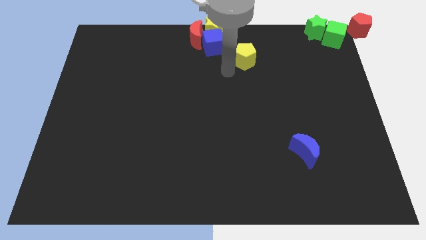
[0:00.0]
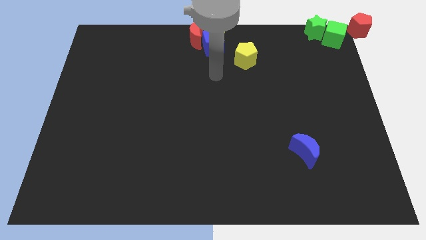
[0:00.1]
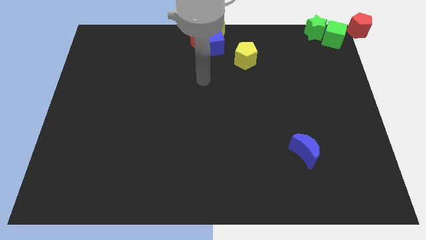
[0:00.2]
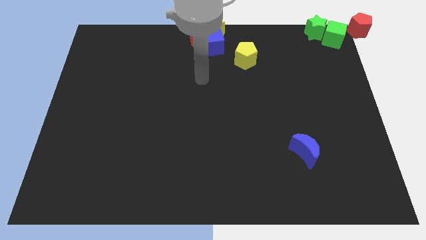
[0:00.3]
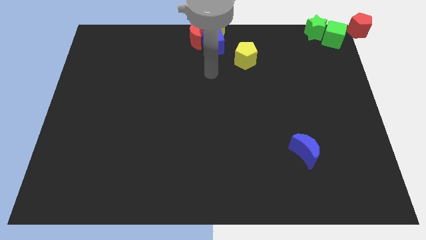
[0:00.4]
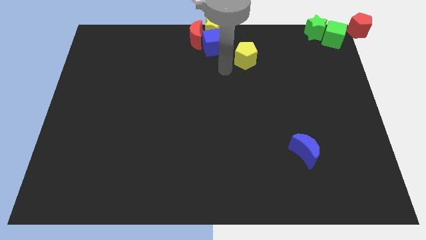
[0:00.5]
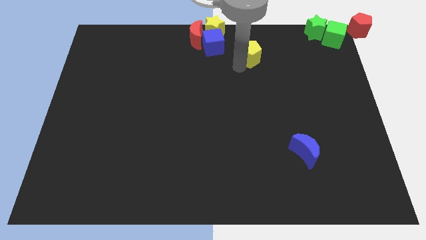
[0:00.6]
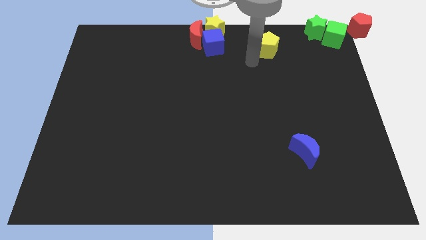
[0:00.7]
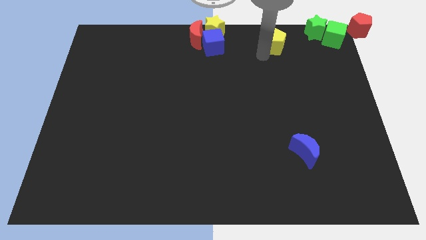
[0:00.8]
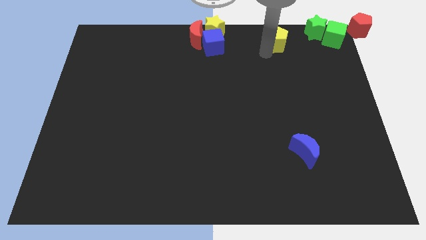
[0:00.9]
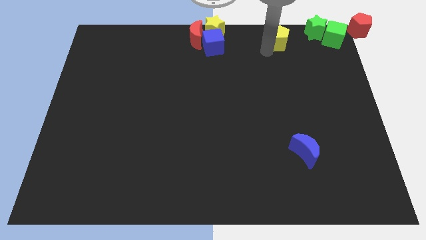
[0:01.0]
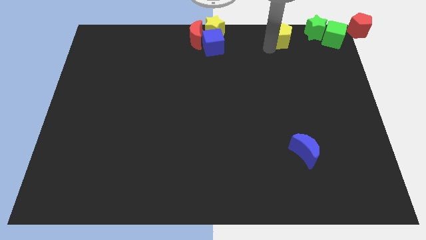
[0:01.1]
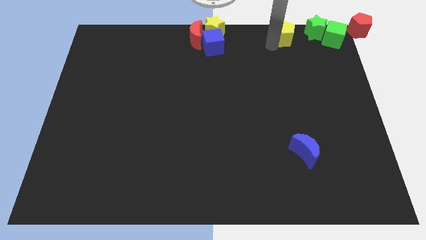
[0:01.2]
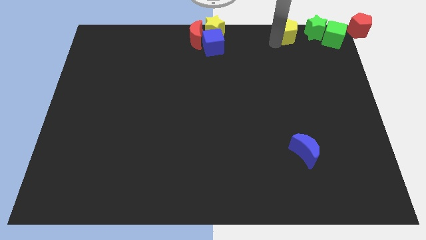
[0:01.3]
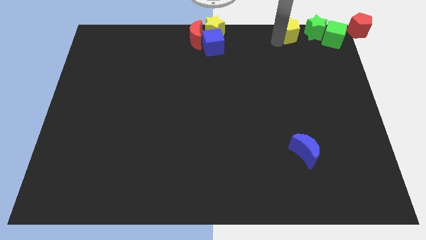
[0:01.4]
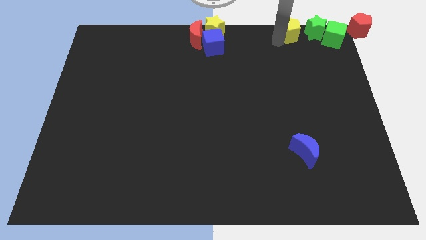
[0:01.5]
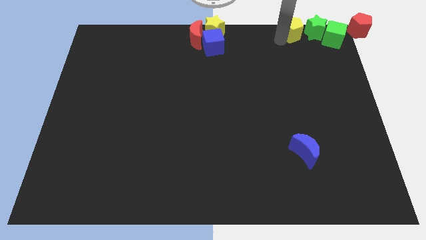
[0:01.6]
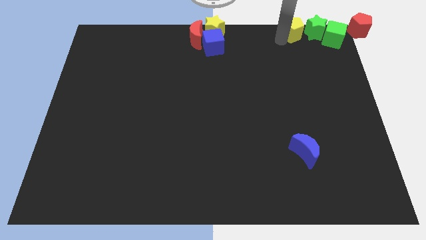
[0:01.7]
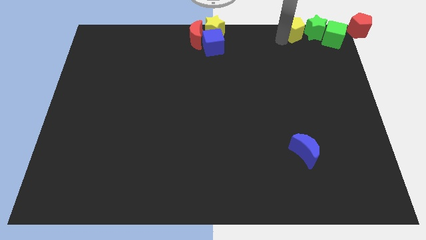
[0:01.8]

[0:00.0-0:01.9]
put the yellow pentagon to the left of the green star

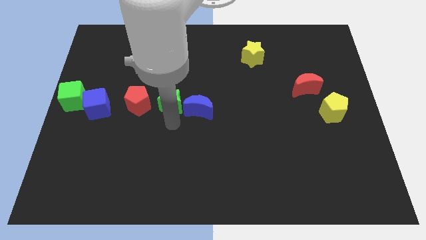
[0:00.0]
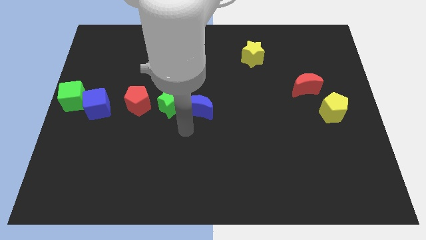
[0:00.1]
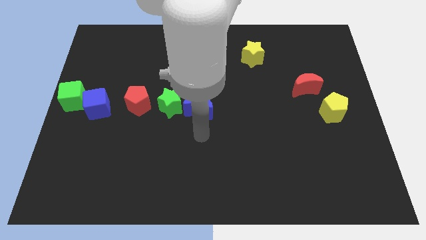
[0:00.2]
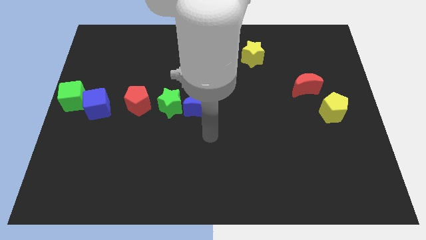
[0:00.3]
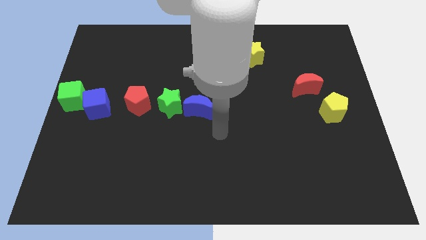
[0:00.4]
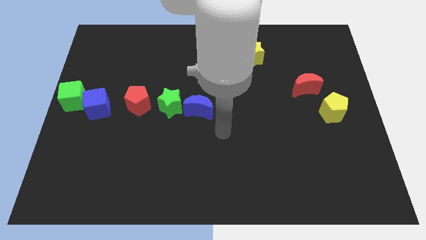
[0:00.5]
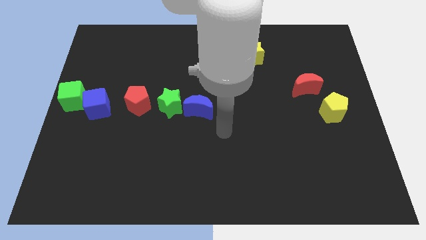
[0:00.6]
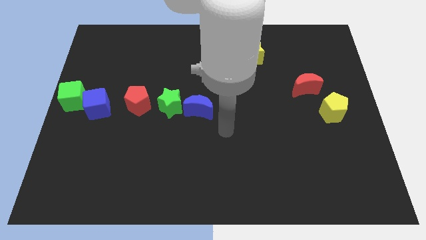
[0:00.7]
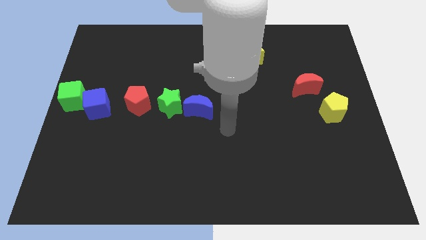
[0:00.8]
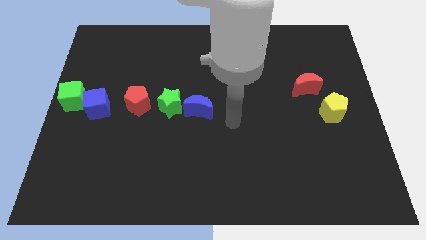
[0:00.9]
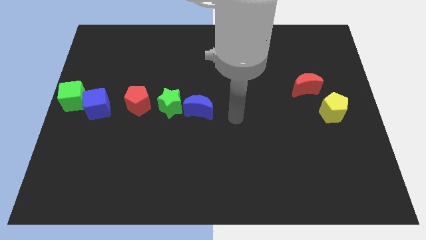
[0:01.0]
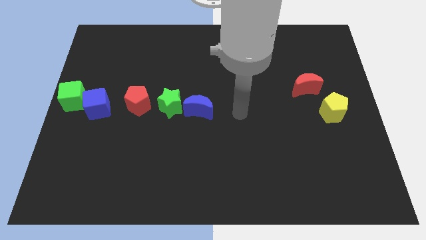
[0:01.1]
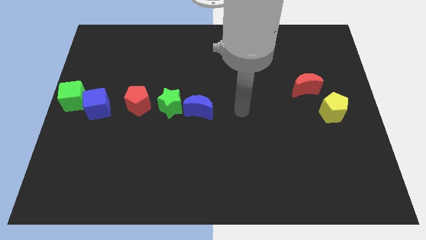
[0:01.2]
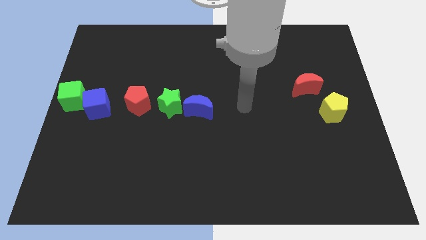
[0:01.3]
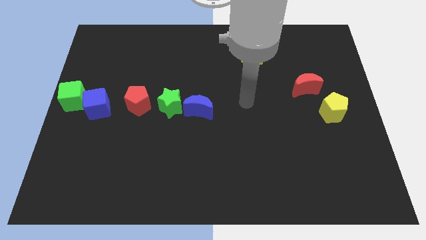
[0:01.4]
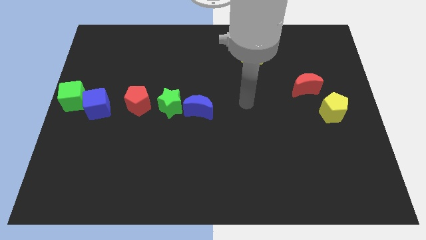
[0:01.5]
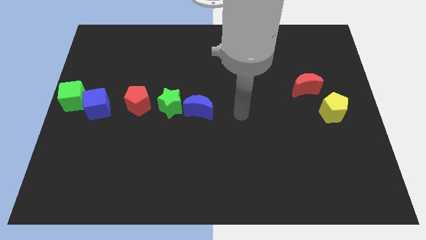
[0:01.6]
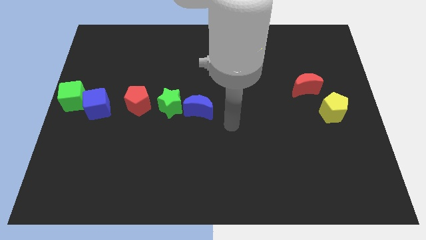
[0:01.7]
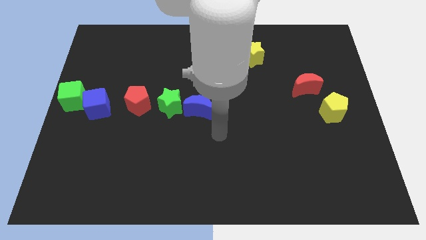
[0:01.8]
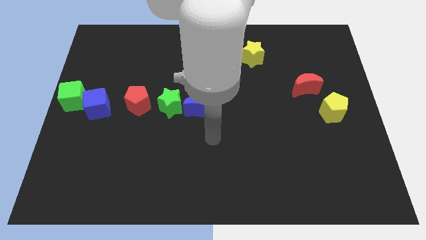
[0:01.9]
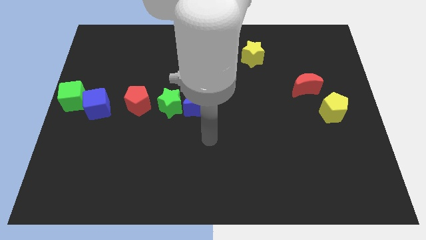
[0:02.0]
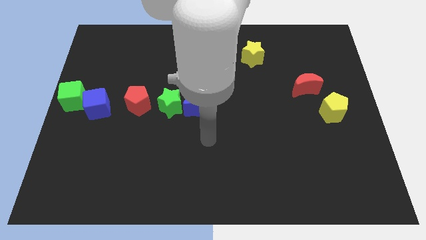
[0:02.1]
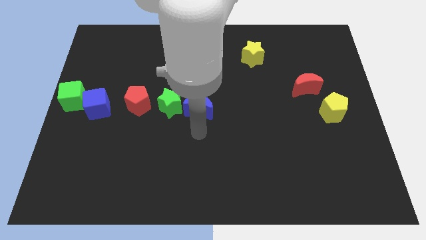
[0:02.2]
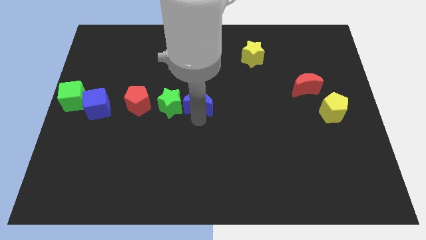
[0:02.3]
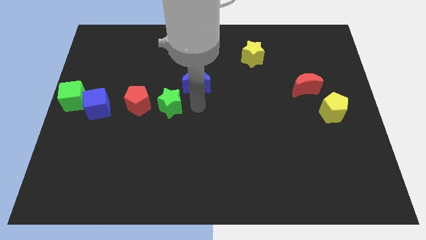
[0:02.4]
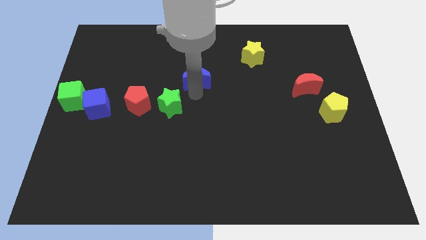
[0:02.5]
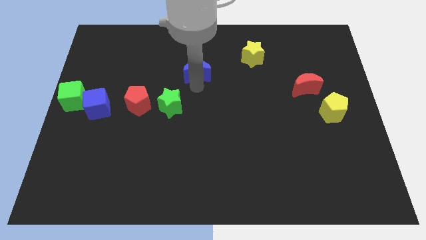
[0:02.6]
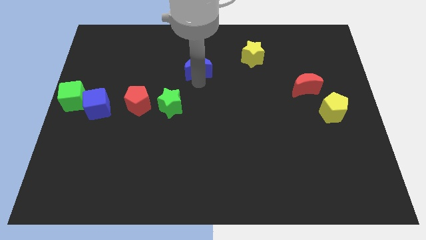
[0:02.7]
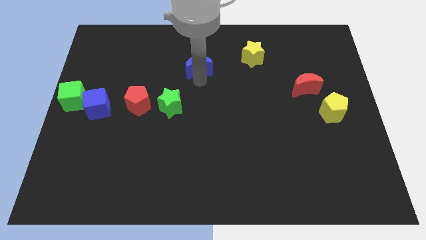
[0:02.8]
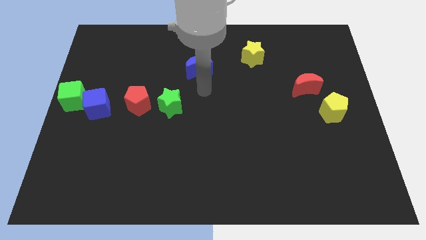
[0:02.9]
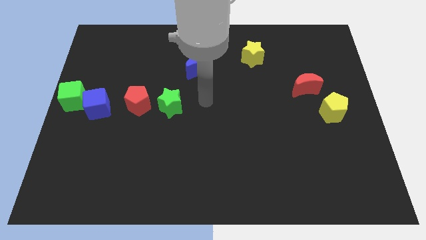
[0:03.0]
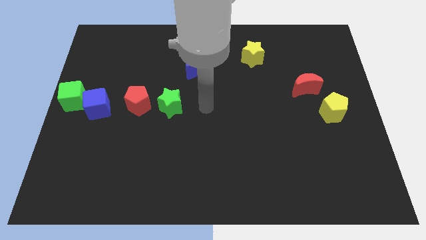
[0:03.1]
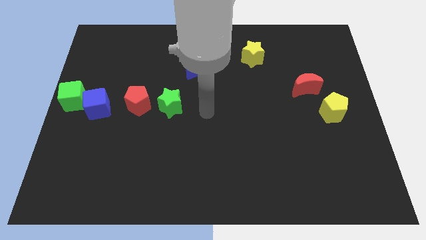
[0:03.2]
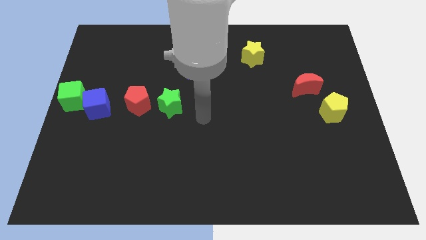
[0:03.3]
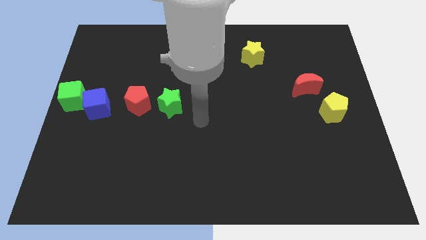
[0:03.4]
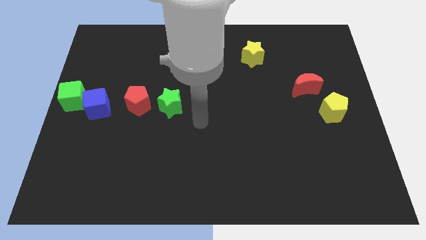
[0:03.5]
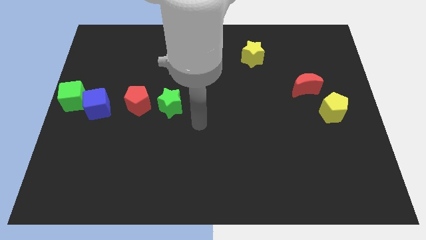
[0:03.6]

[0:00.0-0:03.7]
place the blue crescent towards the left corner of the yellow star

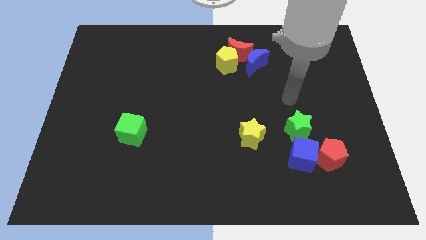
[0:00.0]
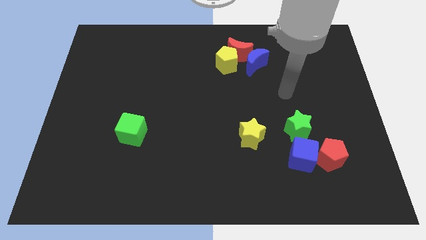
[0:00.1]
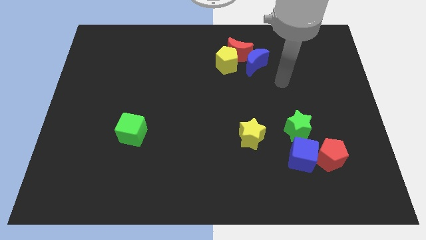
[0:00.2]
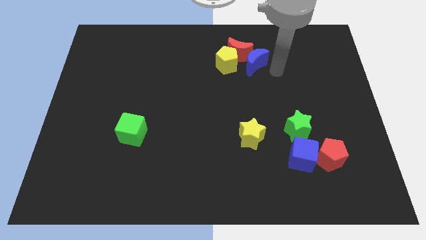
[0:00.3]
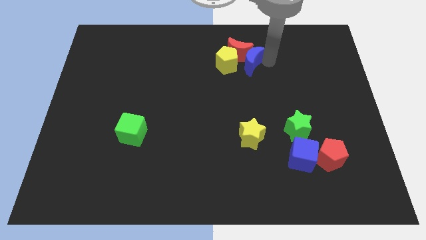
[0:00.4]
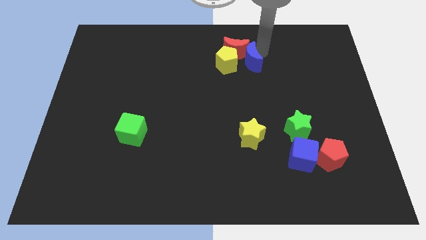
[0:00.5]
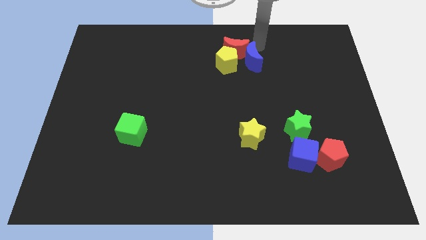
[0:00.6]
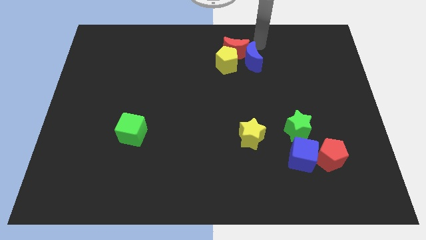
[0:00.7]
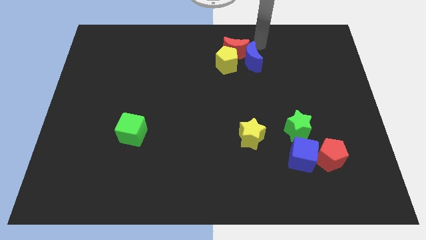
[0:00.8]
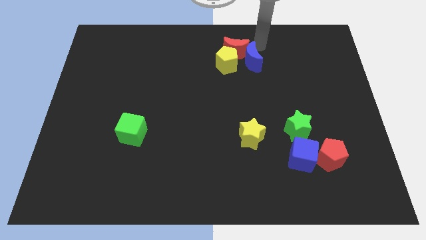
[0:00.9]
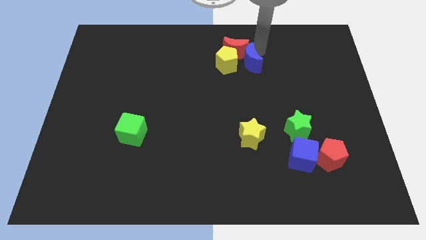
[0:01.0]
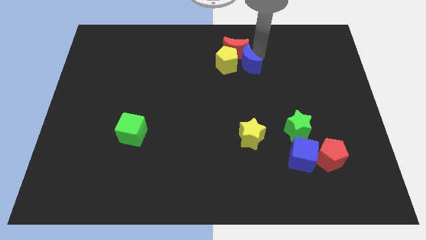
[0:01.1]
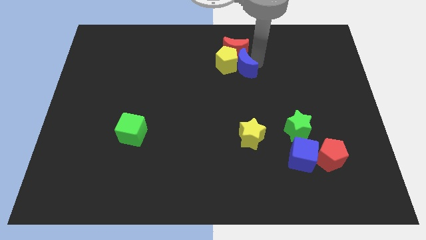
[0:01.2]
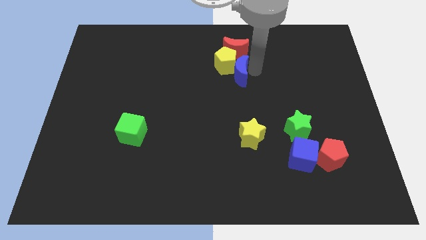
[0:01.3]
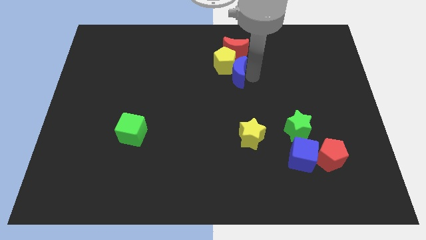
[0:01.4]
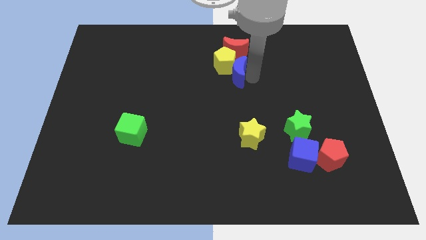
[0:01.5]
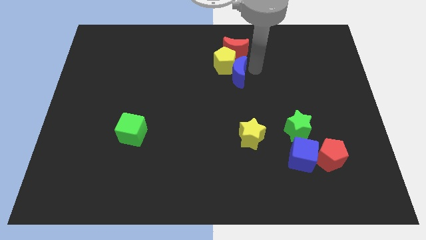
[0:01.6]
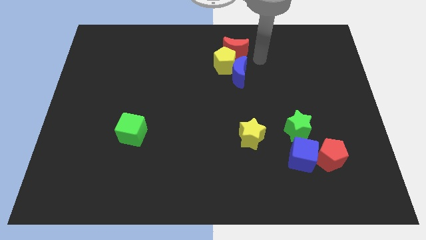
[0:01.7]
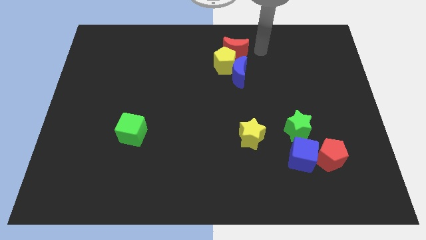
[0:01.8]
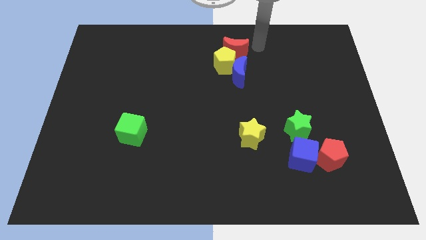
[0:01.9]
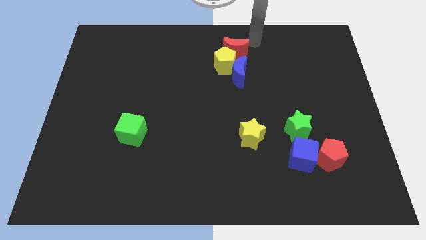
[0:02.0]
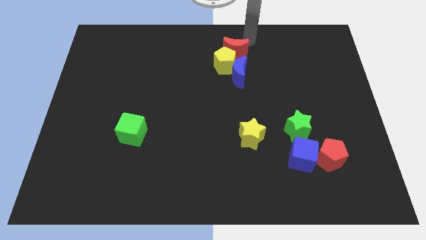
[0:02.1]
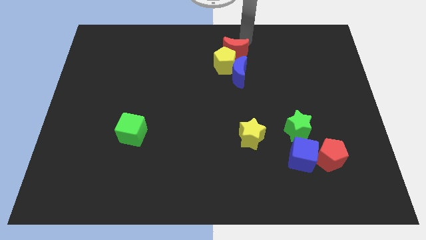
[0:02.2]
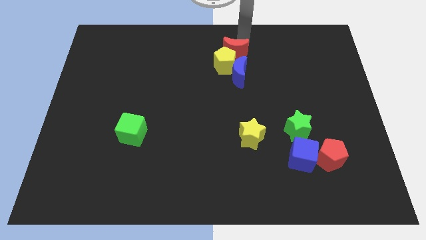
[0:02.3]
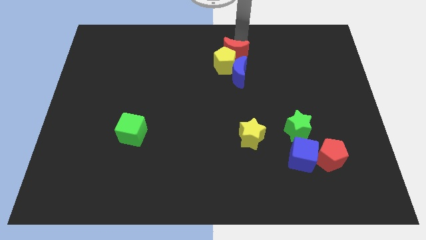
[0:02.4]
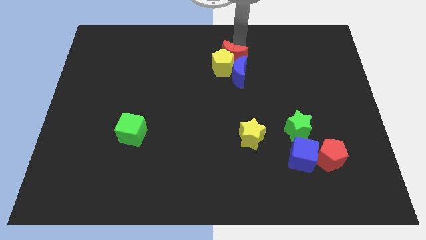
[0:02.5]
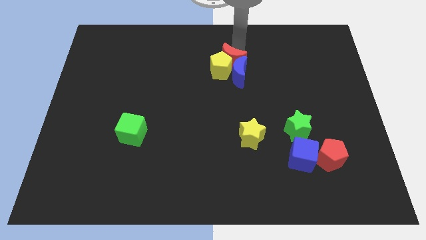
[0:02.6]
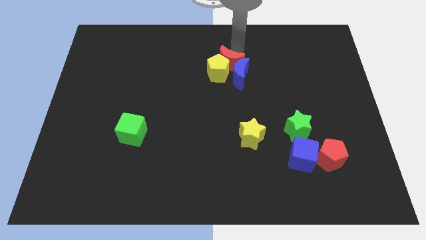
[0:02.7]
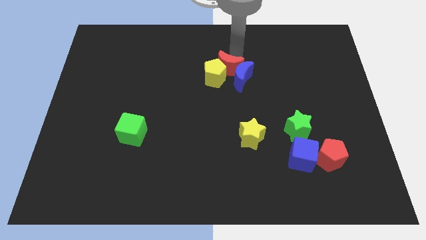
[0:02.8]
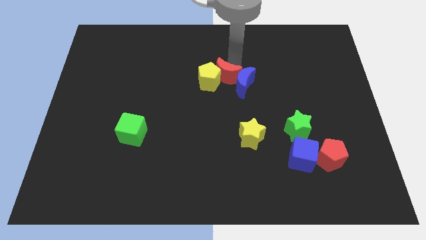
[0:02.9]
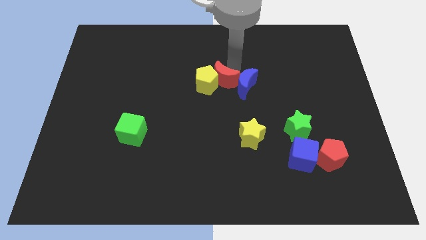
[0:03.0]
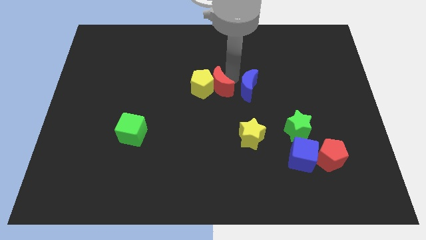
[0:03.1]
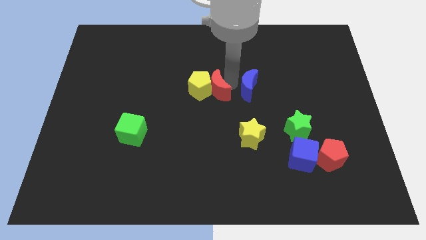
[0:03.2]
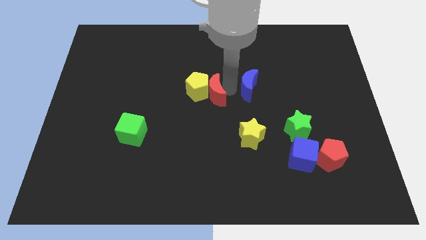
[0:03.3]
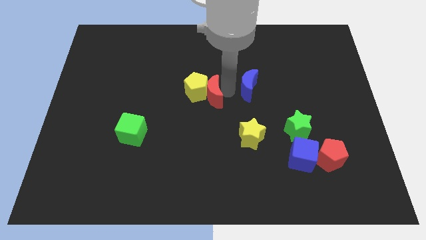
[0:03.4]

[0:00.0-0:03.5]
push the yellow pentagon and red crescent towards the center of the board
